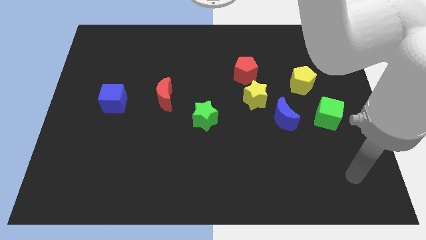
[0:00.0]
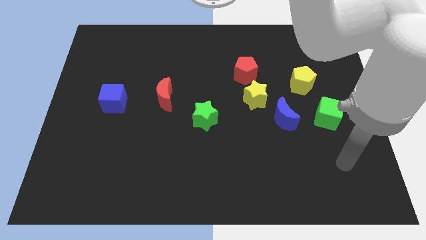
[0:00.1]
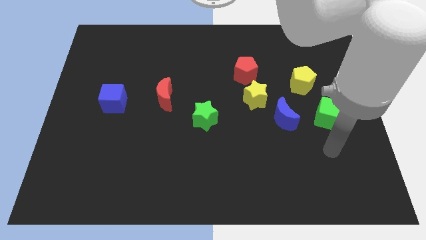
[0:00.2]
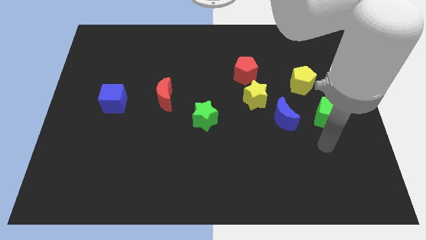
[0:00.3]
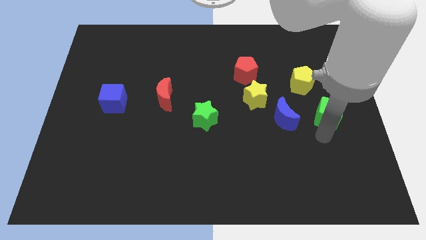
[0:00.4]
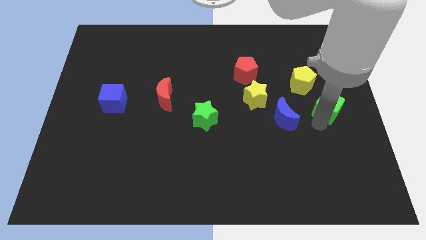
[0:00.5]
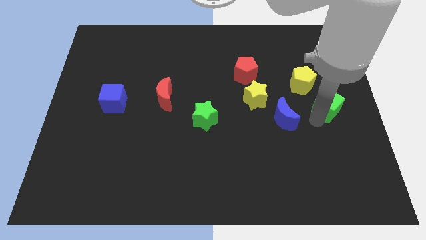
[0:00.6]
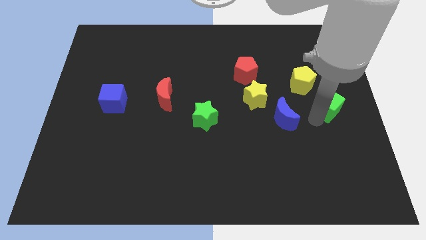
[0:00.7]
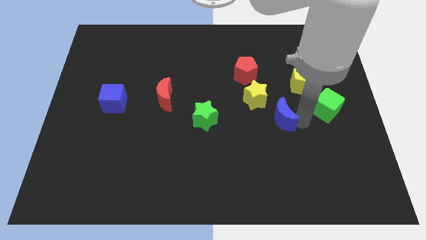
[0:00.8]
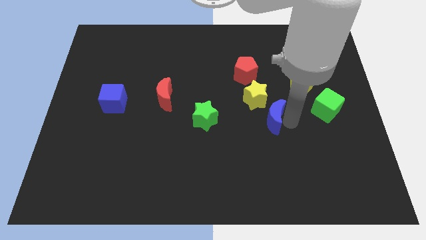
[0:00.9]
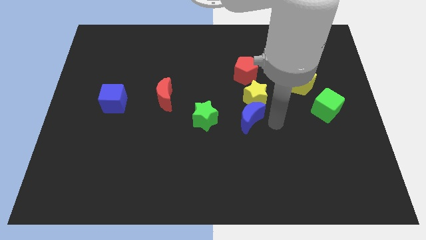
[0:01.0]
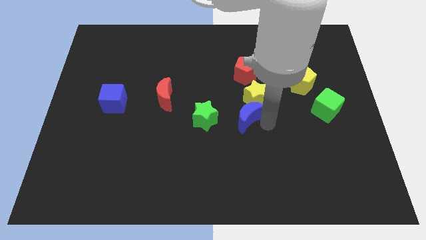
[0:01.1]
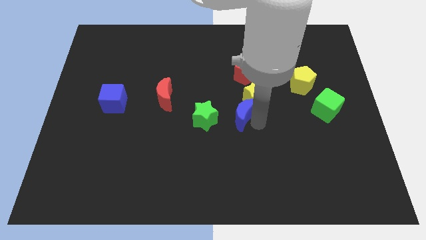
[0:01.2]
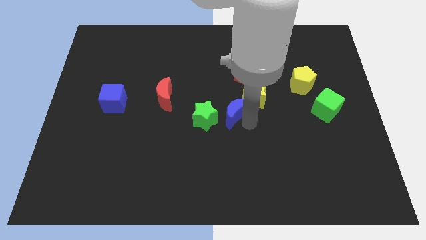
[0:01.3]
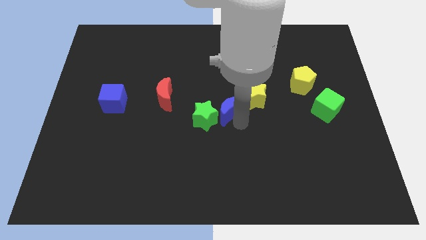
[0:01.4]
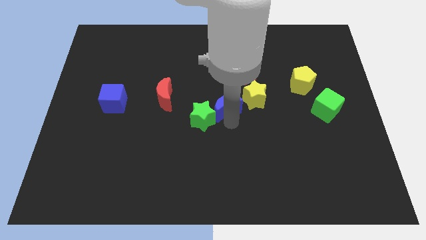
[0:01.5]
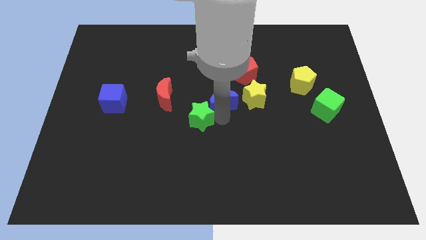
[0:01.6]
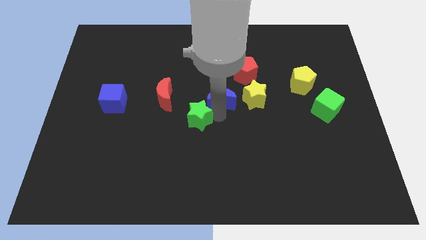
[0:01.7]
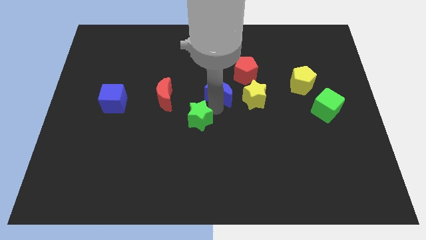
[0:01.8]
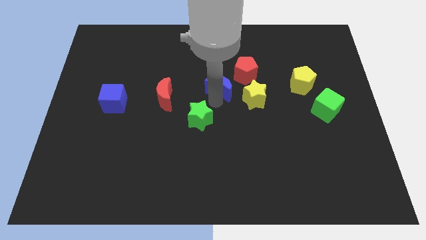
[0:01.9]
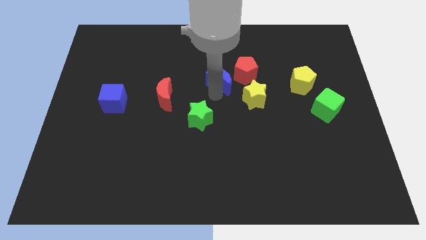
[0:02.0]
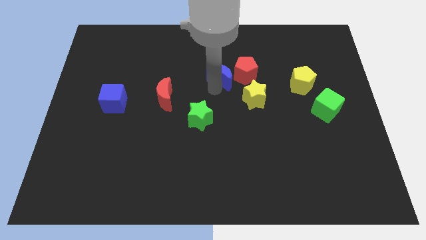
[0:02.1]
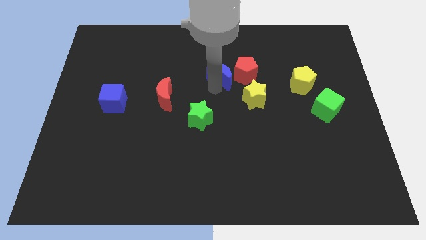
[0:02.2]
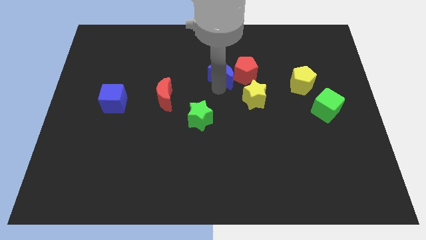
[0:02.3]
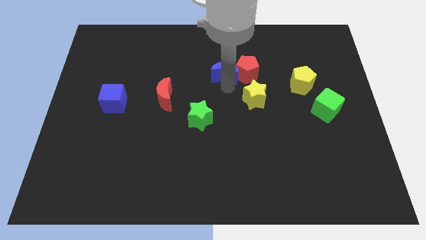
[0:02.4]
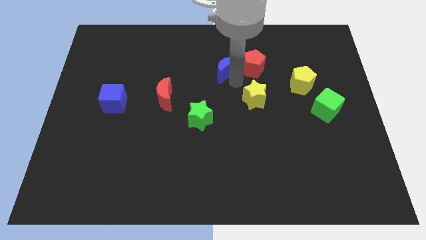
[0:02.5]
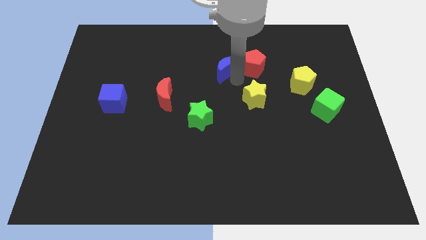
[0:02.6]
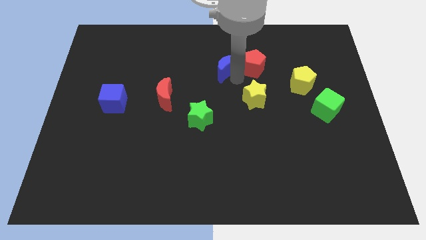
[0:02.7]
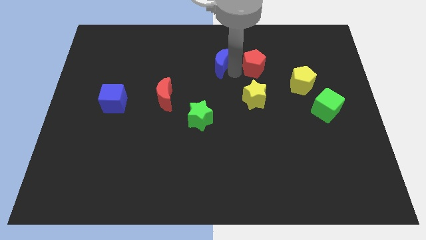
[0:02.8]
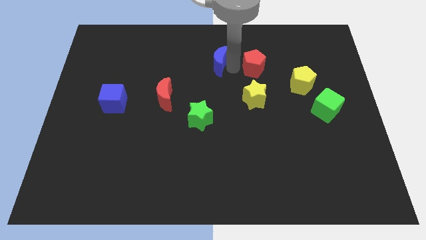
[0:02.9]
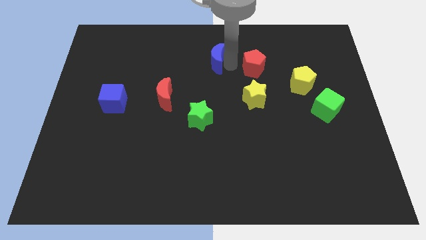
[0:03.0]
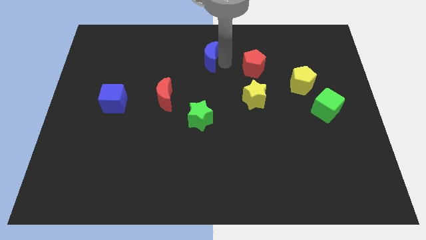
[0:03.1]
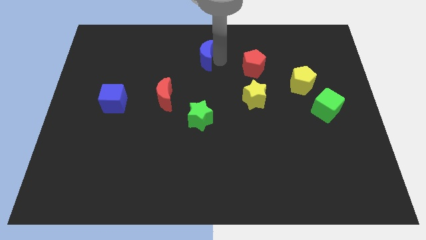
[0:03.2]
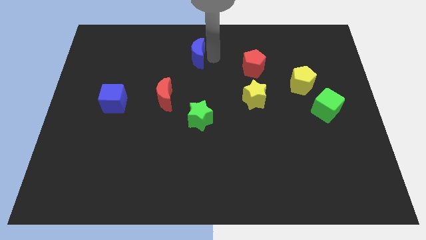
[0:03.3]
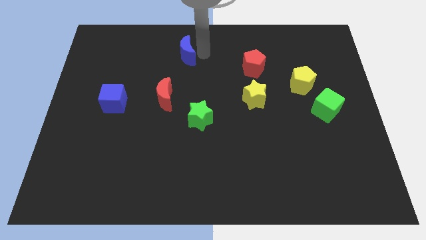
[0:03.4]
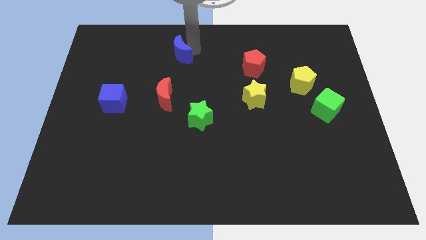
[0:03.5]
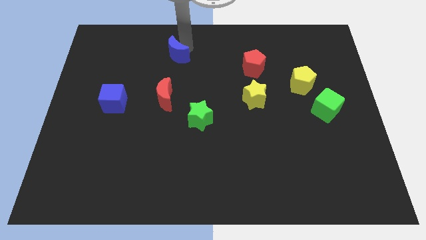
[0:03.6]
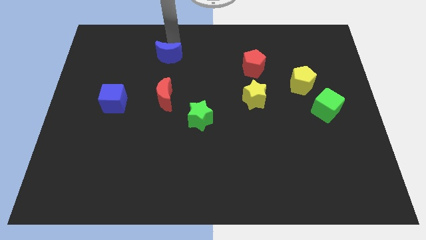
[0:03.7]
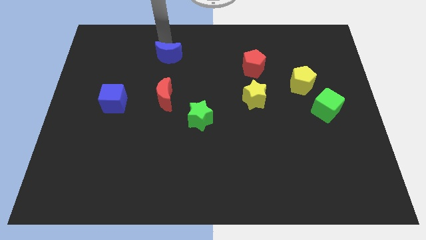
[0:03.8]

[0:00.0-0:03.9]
put the blue crescent above the red crescent

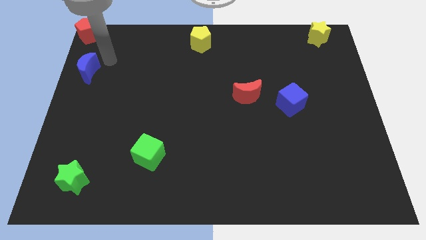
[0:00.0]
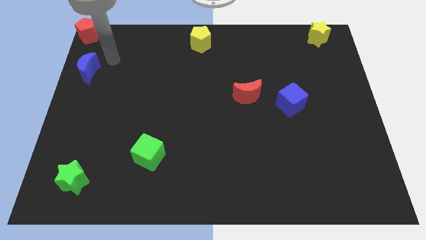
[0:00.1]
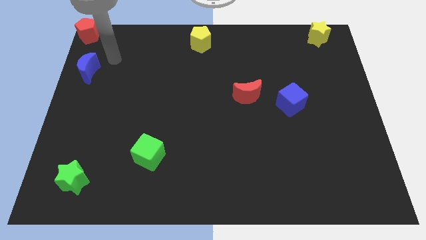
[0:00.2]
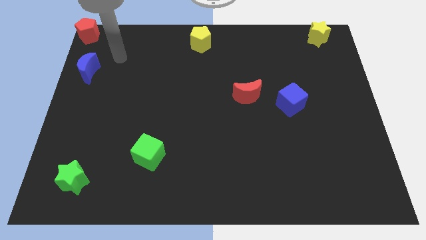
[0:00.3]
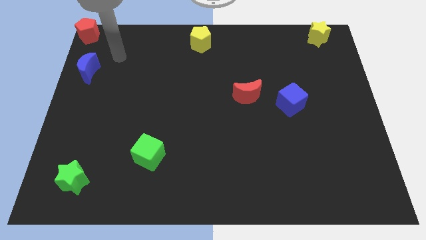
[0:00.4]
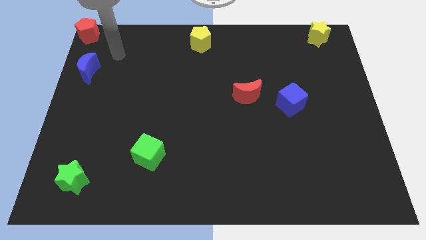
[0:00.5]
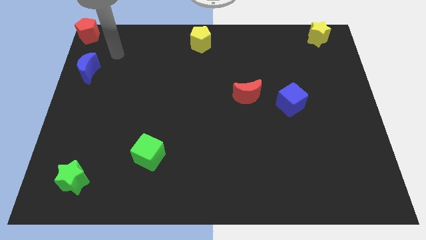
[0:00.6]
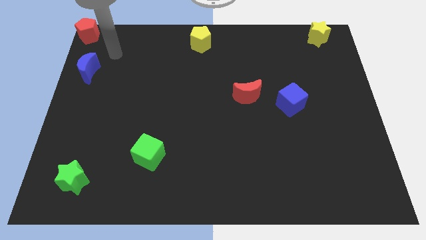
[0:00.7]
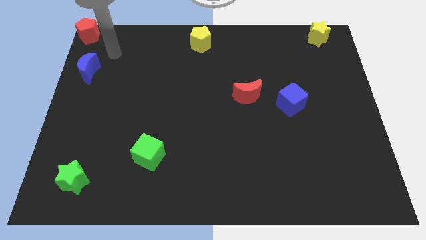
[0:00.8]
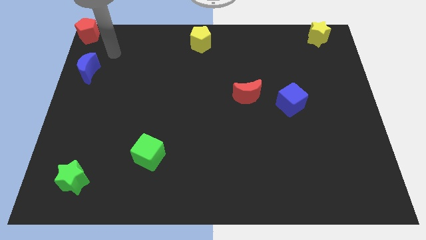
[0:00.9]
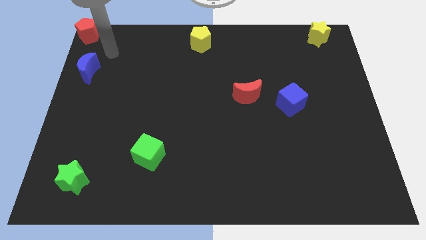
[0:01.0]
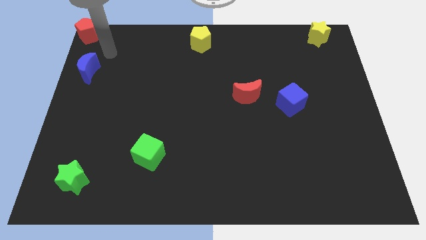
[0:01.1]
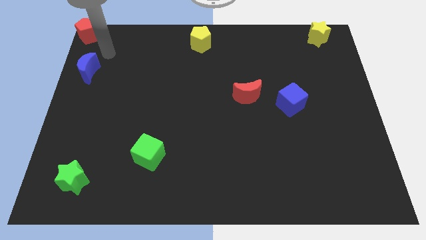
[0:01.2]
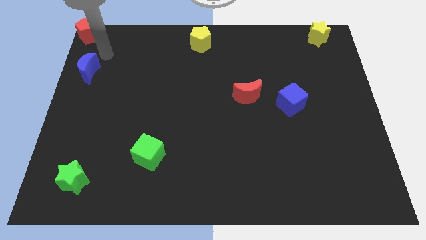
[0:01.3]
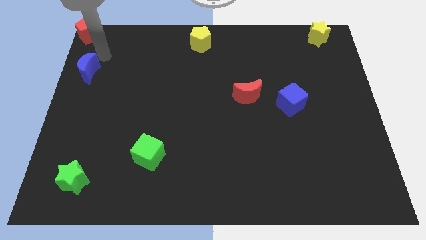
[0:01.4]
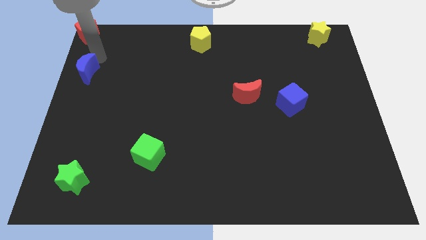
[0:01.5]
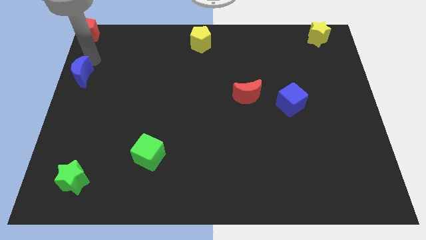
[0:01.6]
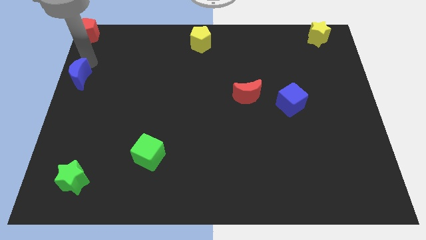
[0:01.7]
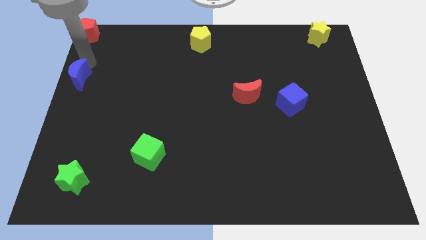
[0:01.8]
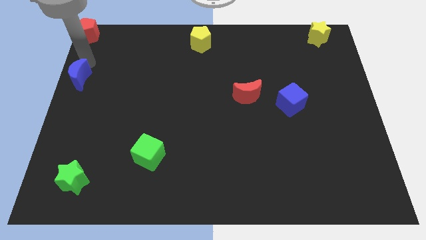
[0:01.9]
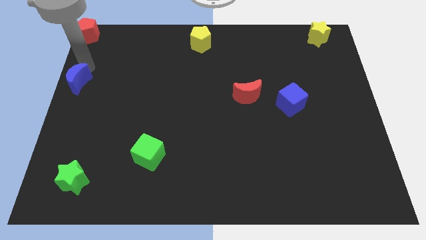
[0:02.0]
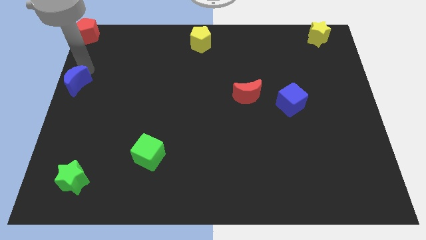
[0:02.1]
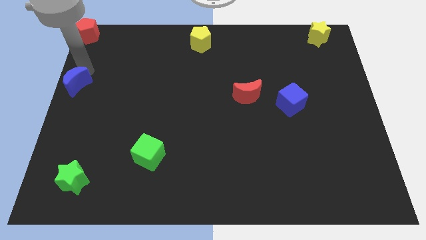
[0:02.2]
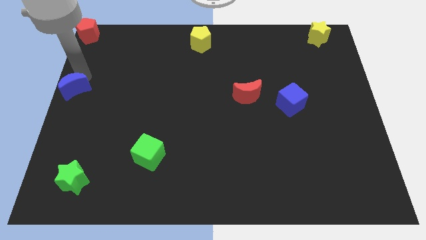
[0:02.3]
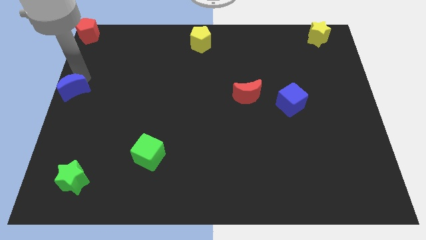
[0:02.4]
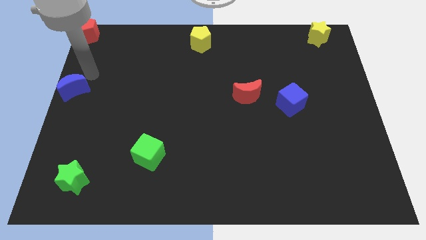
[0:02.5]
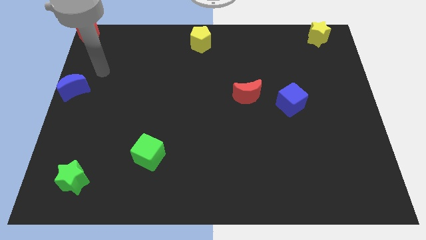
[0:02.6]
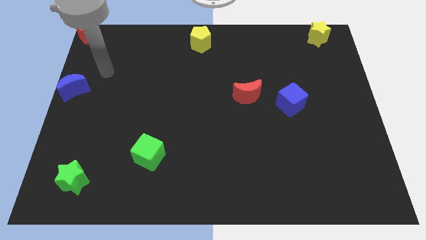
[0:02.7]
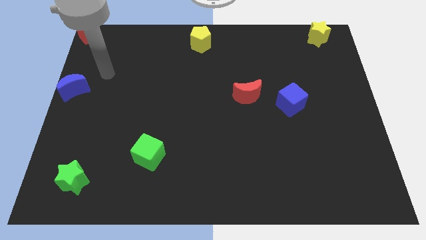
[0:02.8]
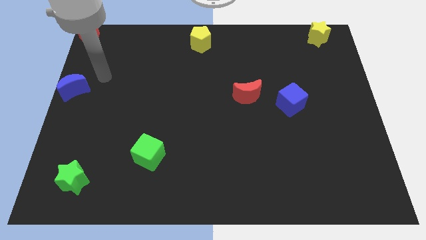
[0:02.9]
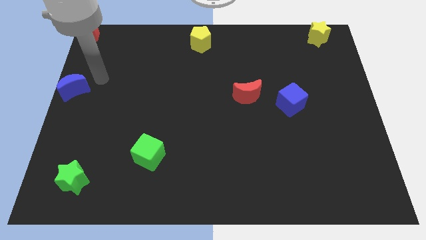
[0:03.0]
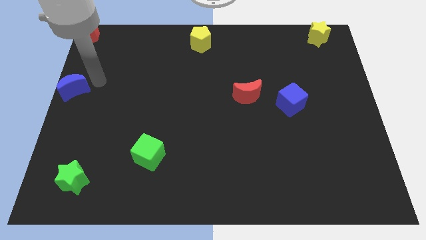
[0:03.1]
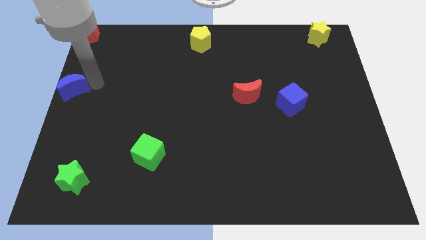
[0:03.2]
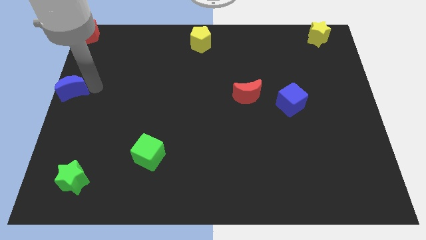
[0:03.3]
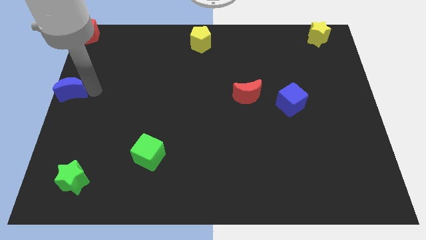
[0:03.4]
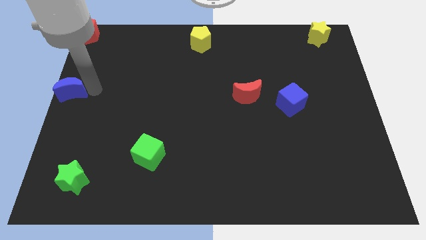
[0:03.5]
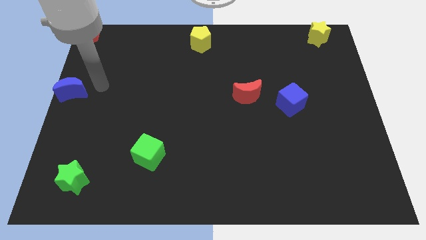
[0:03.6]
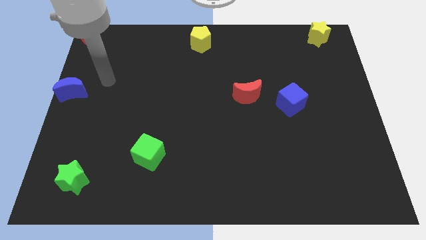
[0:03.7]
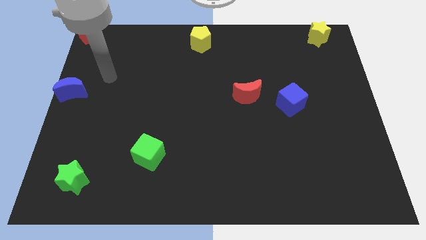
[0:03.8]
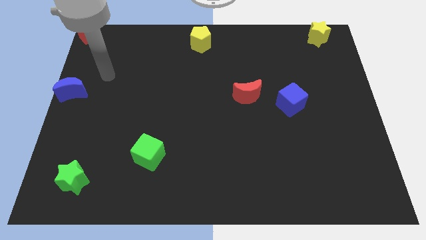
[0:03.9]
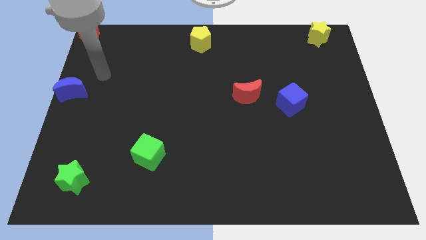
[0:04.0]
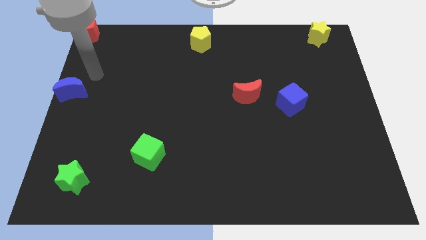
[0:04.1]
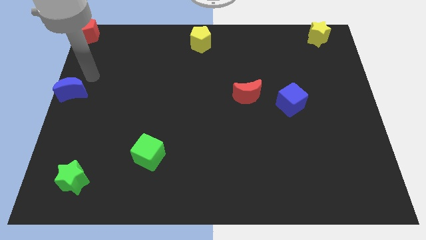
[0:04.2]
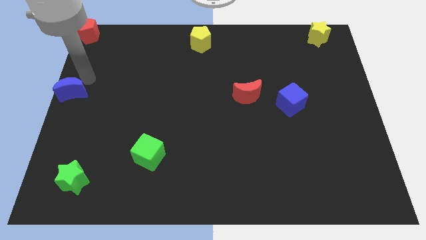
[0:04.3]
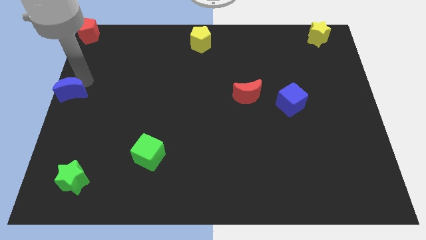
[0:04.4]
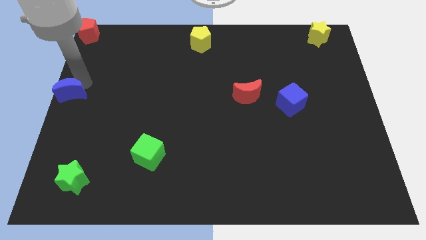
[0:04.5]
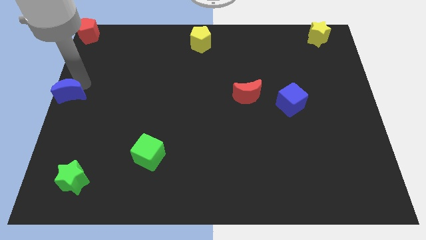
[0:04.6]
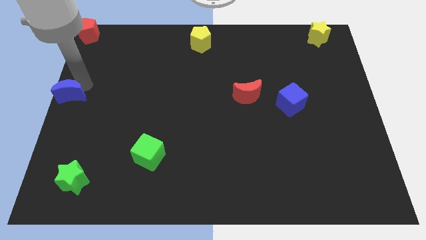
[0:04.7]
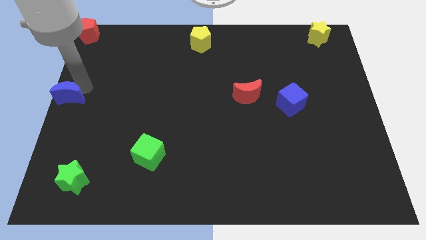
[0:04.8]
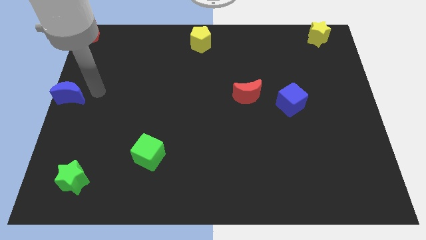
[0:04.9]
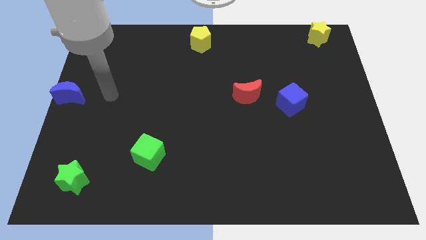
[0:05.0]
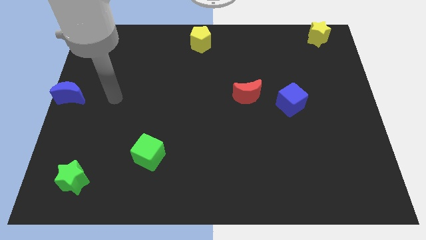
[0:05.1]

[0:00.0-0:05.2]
move the blue moon at the center left corner
